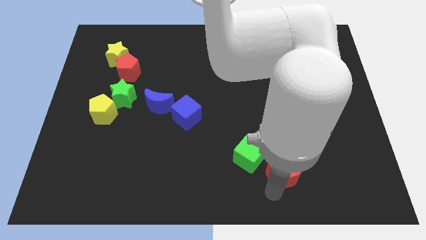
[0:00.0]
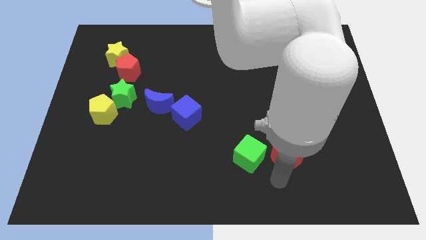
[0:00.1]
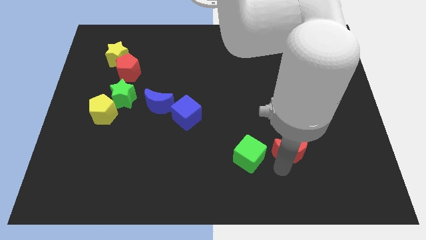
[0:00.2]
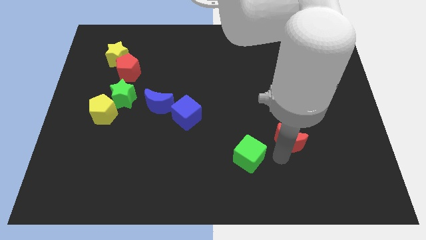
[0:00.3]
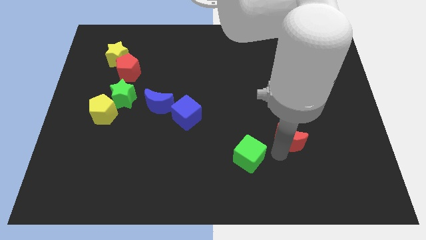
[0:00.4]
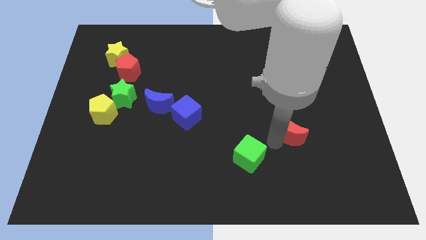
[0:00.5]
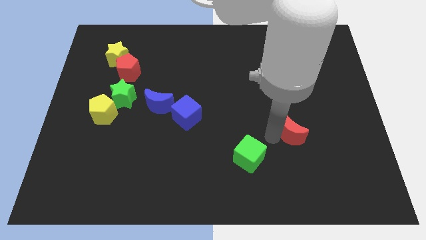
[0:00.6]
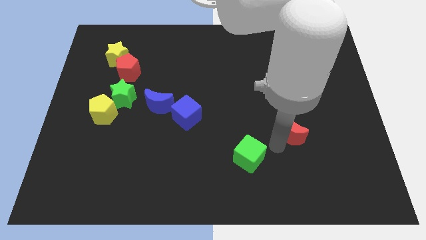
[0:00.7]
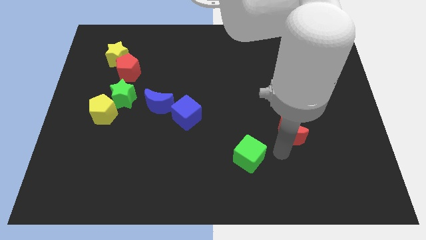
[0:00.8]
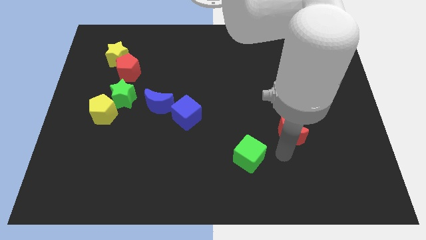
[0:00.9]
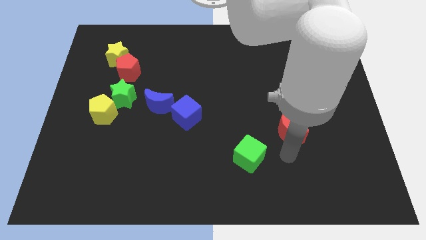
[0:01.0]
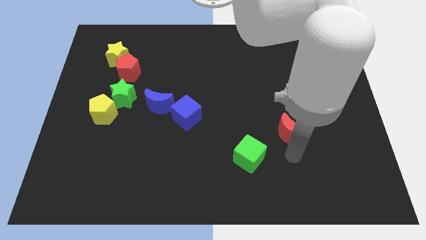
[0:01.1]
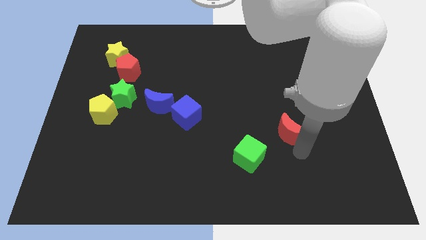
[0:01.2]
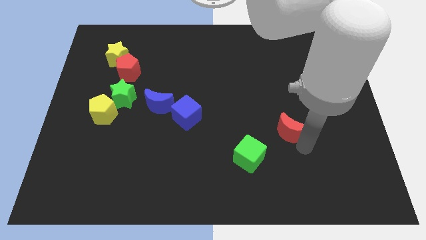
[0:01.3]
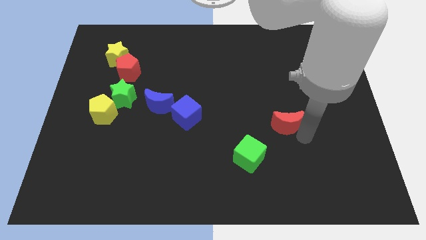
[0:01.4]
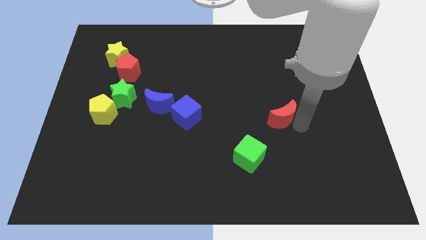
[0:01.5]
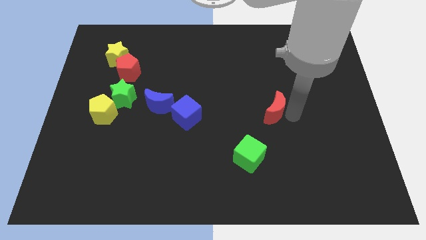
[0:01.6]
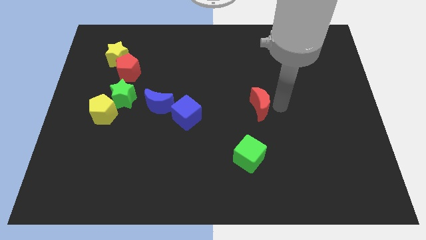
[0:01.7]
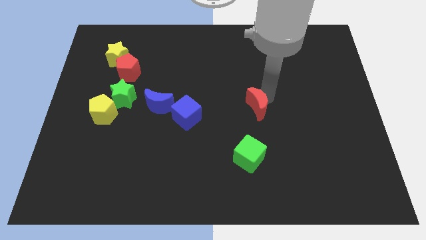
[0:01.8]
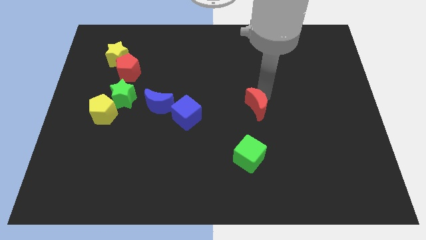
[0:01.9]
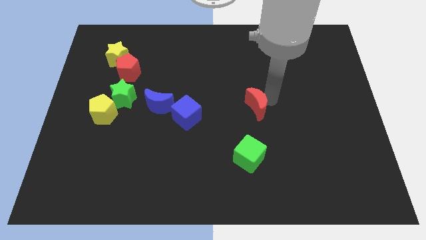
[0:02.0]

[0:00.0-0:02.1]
move the red crescent to the top side of the green cube

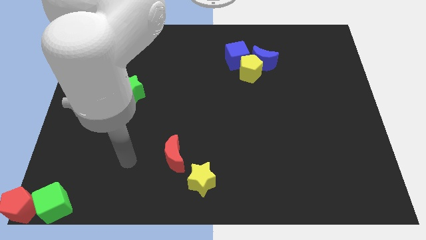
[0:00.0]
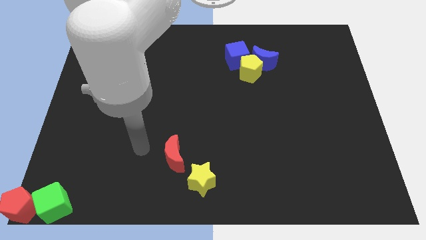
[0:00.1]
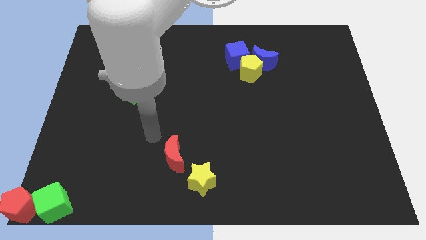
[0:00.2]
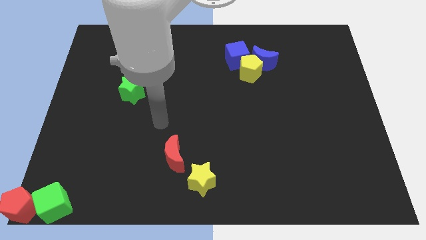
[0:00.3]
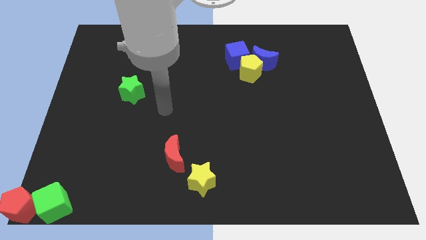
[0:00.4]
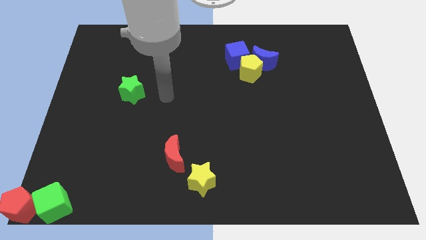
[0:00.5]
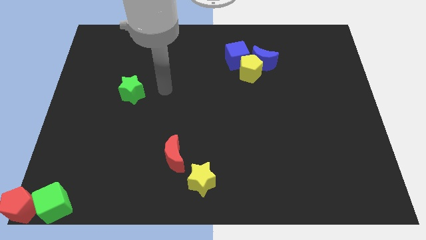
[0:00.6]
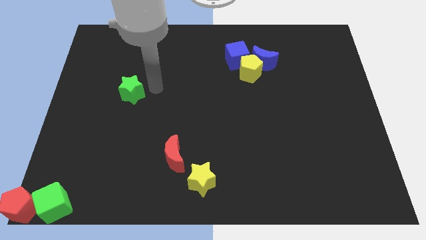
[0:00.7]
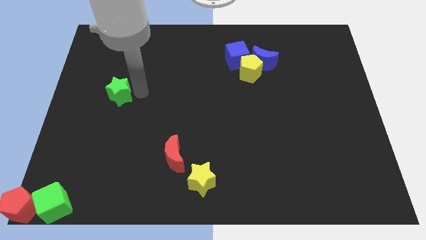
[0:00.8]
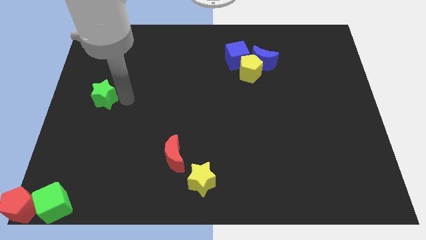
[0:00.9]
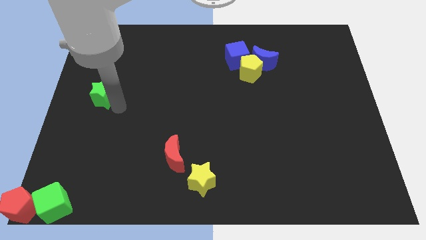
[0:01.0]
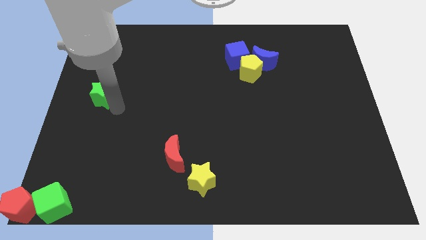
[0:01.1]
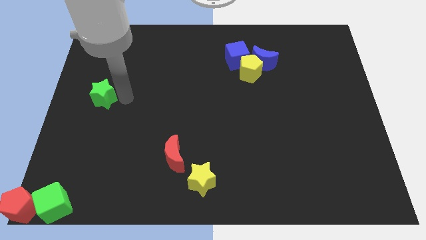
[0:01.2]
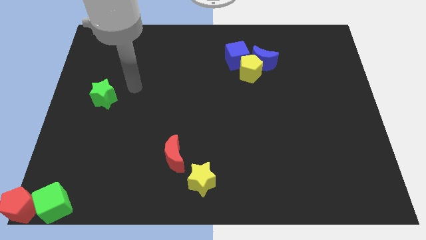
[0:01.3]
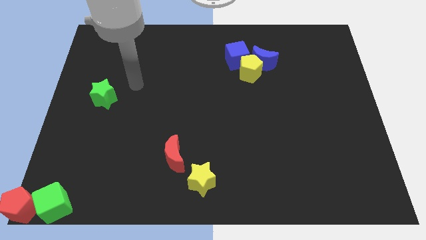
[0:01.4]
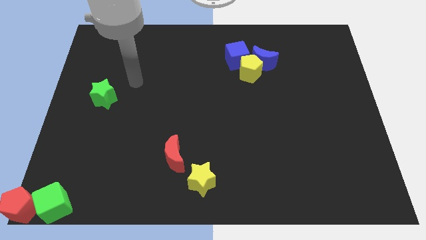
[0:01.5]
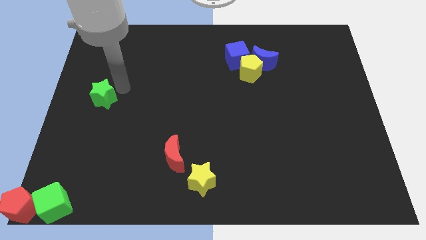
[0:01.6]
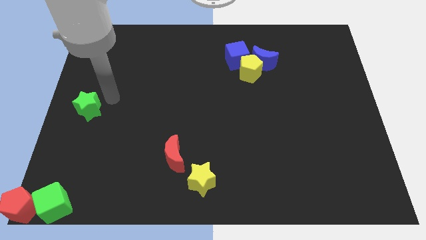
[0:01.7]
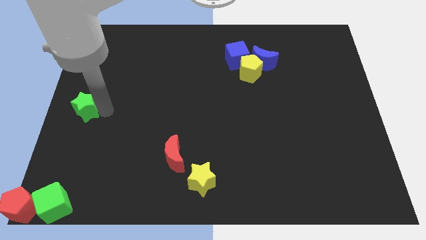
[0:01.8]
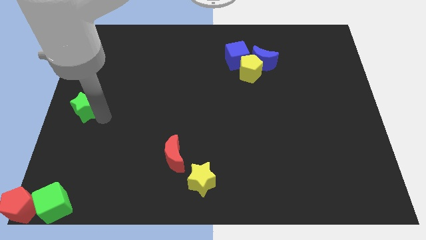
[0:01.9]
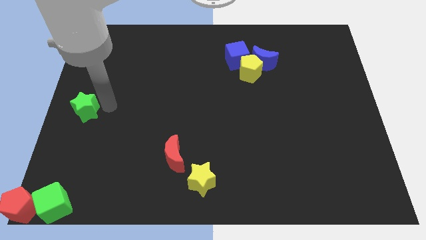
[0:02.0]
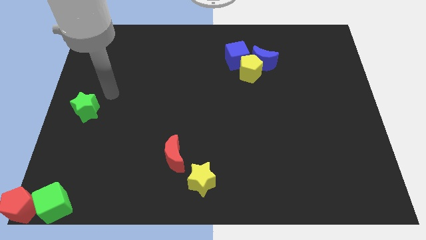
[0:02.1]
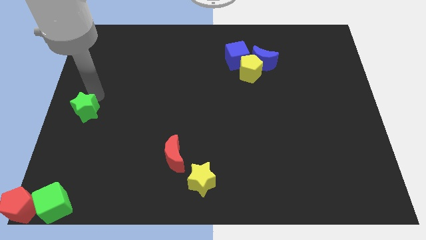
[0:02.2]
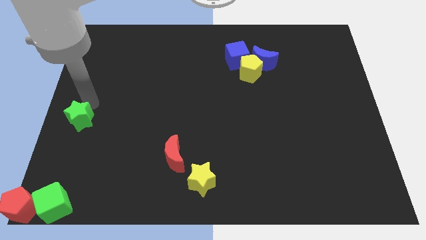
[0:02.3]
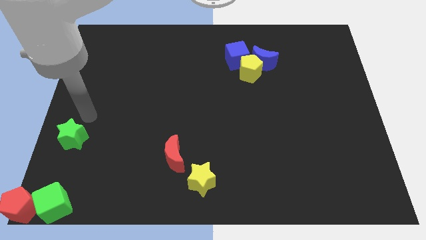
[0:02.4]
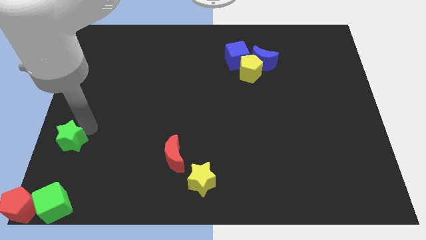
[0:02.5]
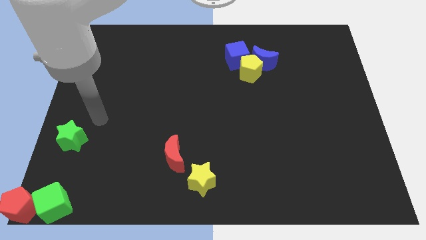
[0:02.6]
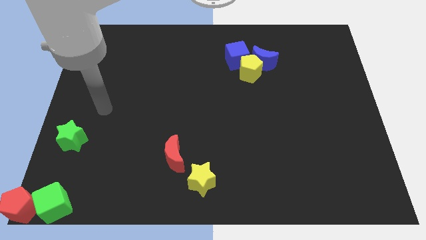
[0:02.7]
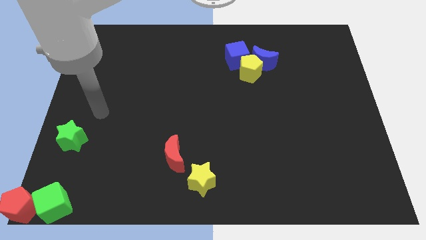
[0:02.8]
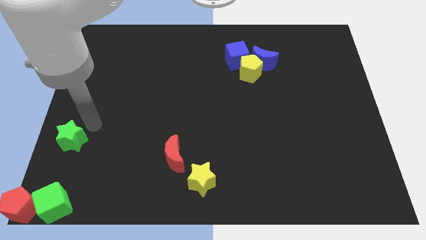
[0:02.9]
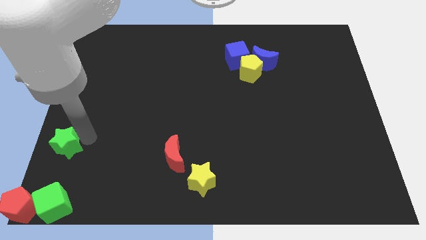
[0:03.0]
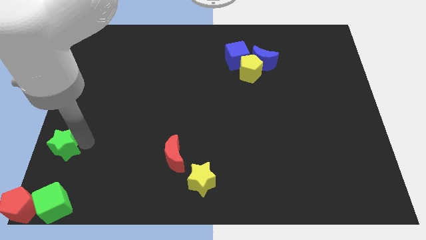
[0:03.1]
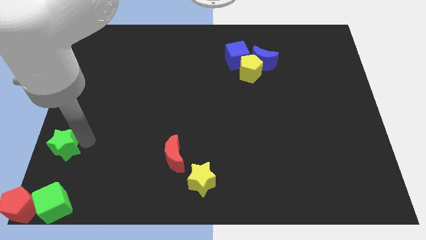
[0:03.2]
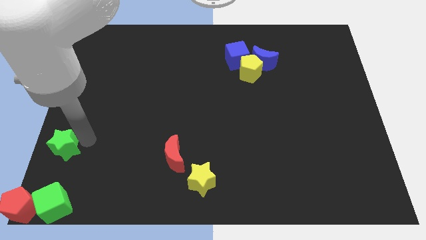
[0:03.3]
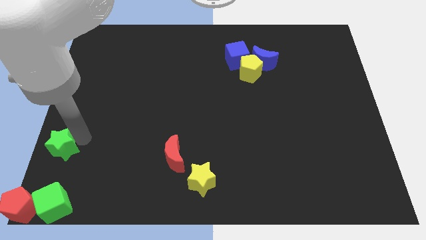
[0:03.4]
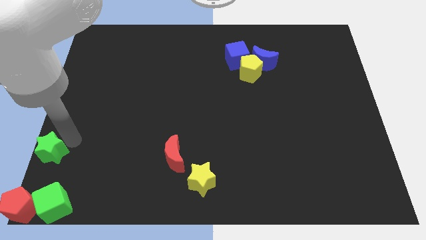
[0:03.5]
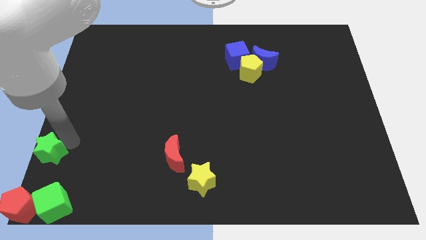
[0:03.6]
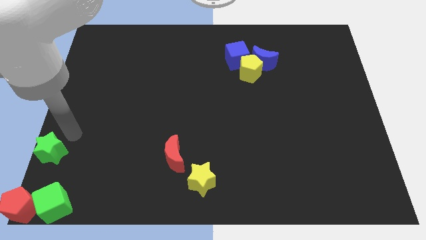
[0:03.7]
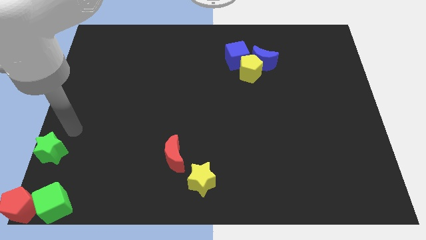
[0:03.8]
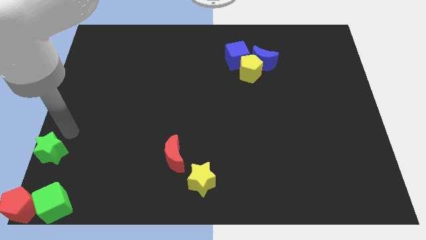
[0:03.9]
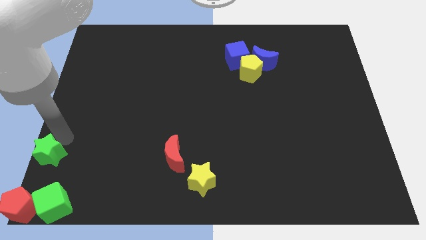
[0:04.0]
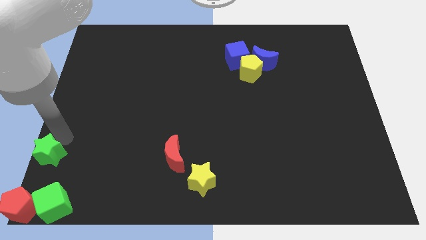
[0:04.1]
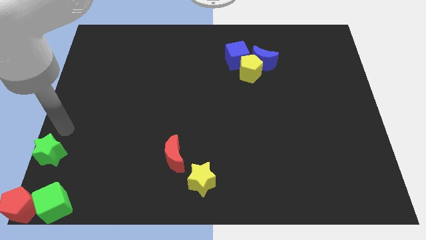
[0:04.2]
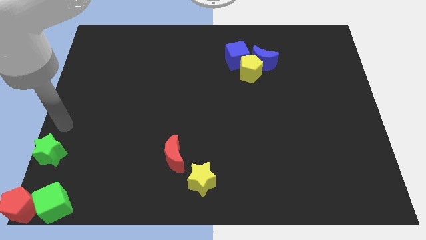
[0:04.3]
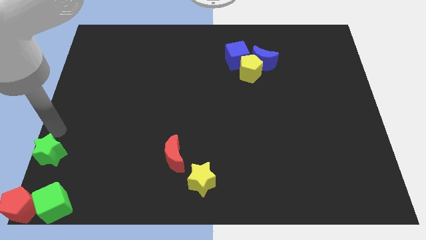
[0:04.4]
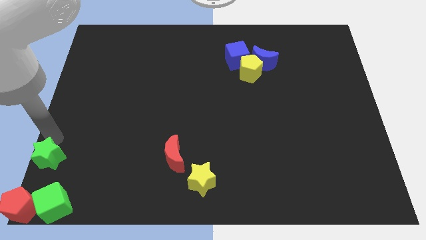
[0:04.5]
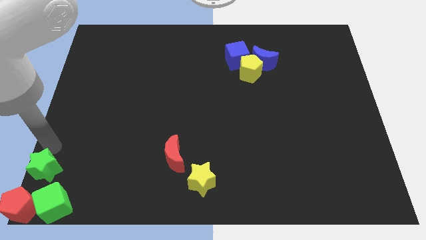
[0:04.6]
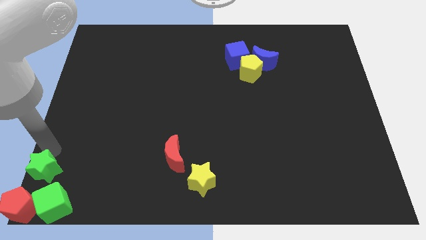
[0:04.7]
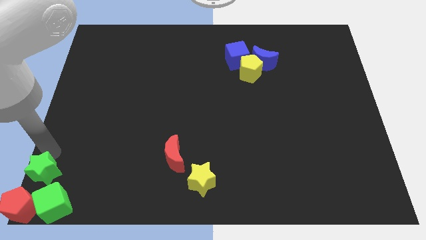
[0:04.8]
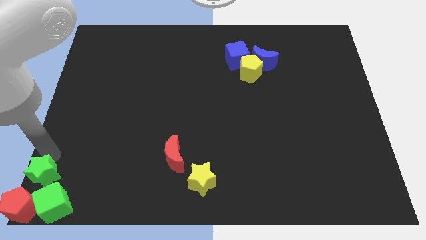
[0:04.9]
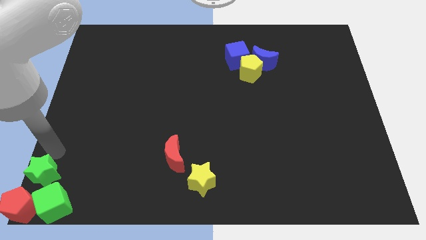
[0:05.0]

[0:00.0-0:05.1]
push the green star above the green cube

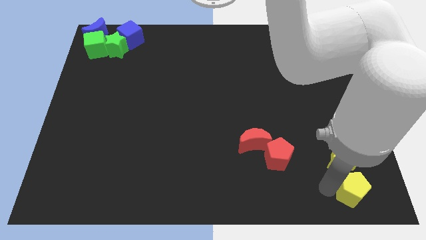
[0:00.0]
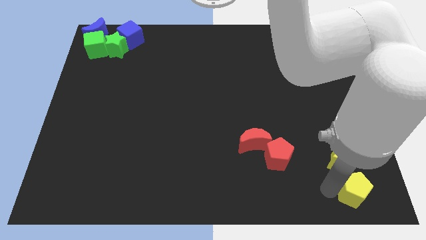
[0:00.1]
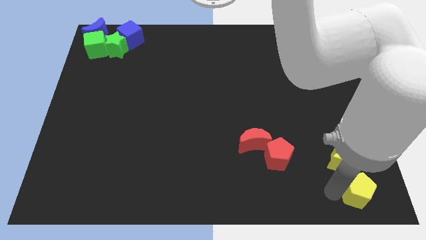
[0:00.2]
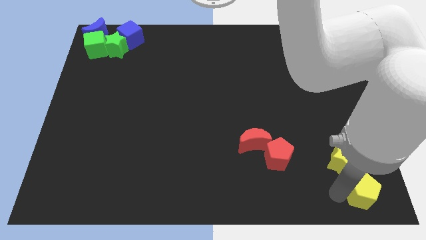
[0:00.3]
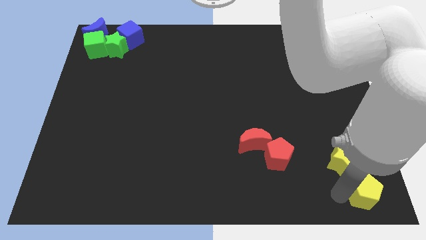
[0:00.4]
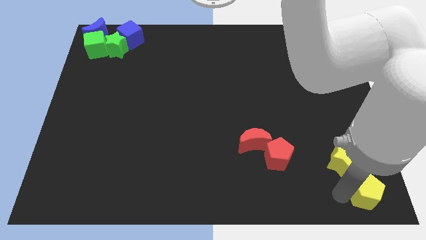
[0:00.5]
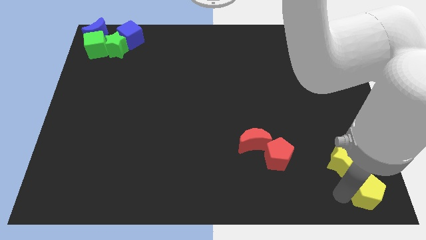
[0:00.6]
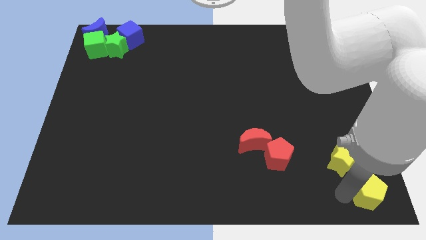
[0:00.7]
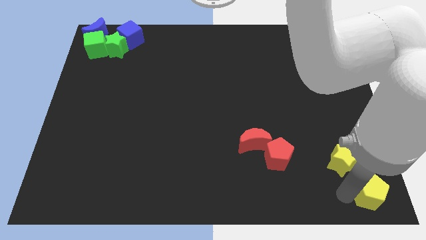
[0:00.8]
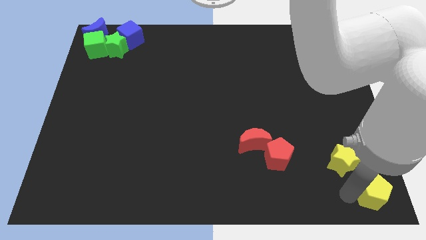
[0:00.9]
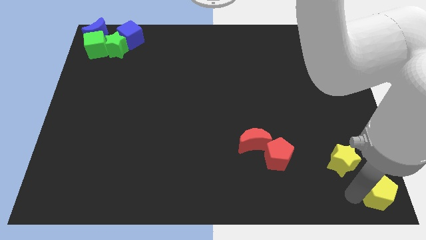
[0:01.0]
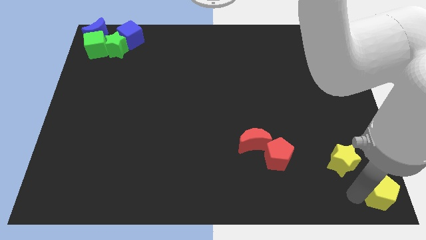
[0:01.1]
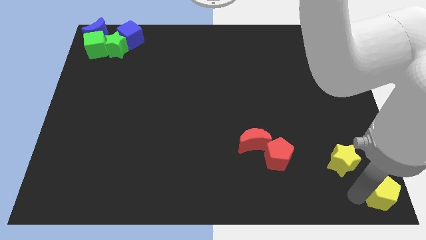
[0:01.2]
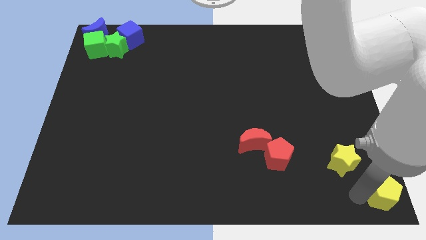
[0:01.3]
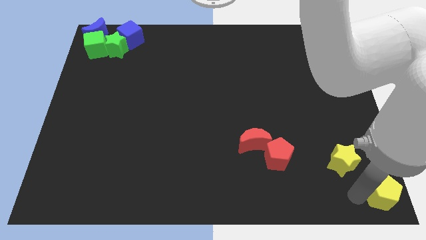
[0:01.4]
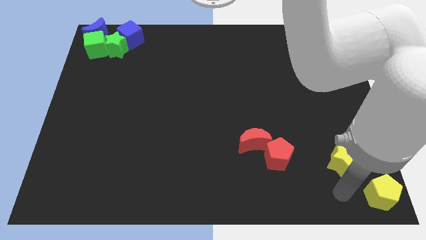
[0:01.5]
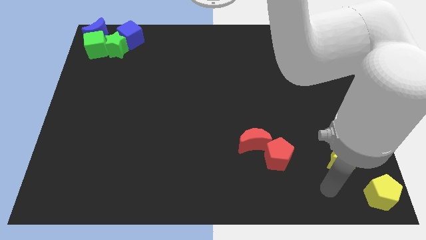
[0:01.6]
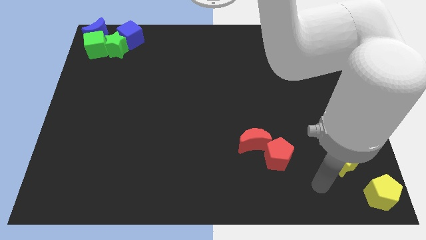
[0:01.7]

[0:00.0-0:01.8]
push the yellow pentagon towards the bottom right of the yellow star

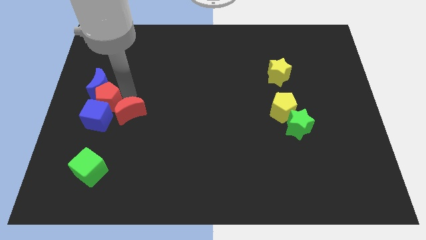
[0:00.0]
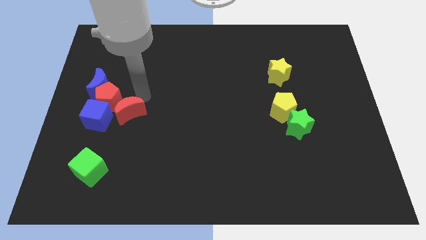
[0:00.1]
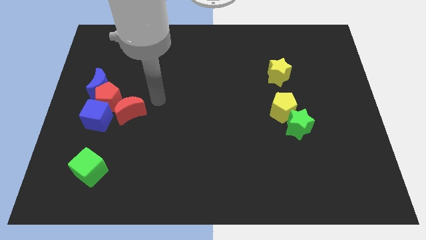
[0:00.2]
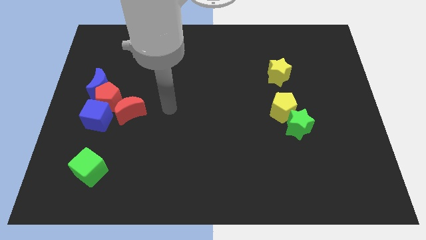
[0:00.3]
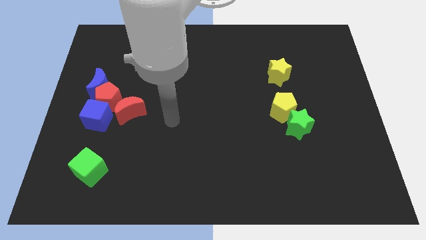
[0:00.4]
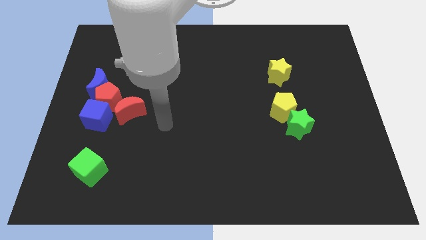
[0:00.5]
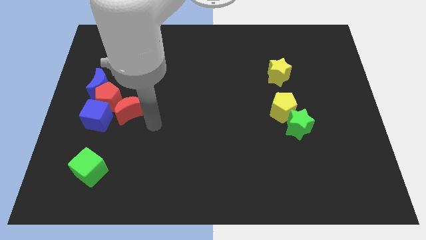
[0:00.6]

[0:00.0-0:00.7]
drag your arm to the right bottom of red crescent
